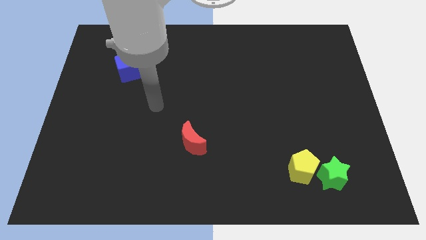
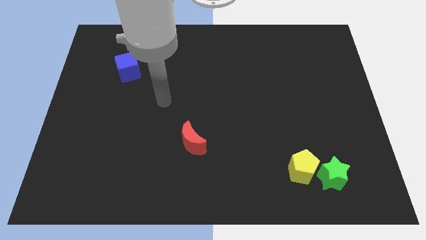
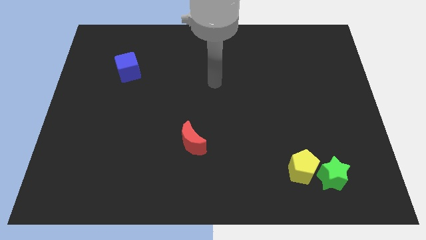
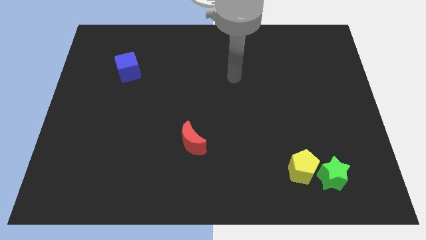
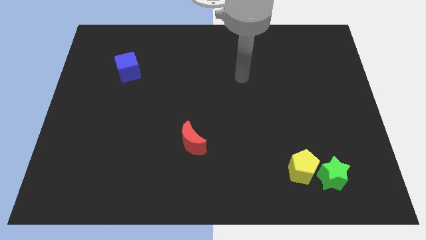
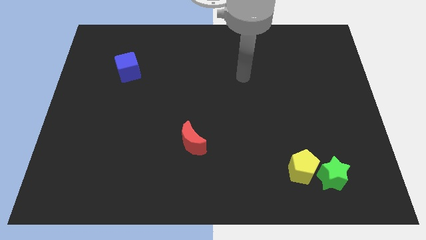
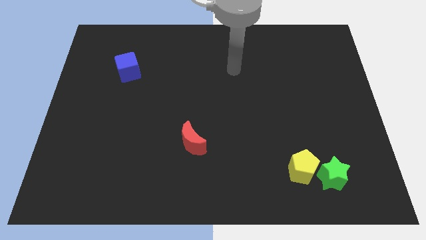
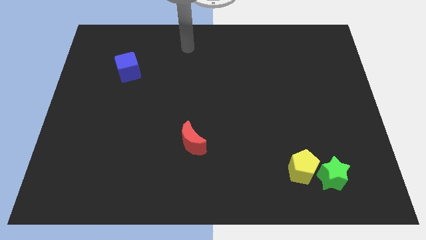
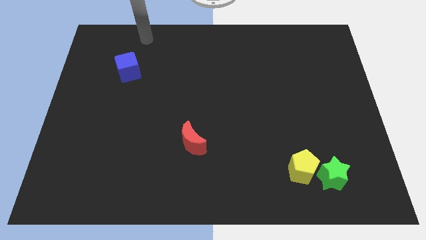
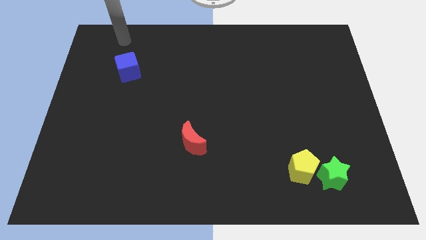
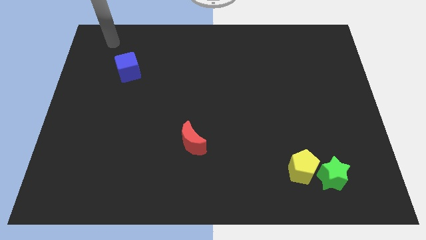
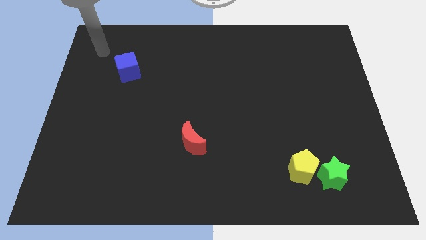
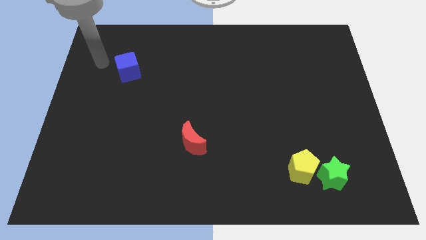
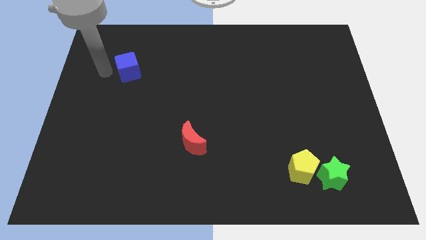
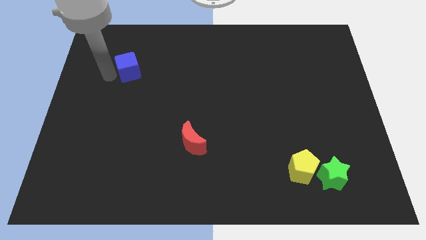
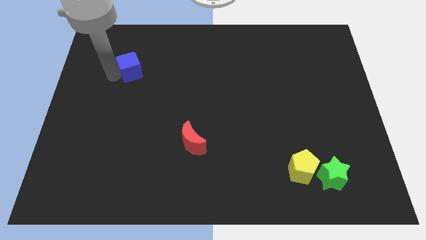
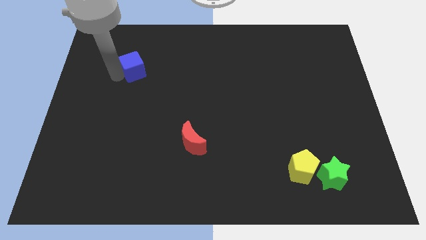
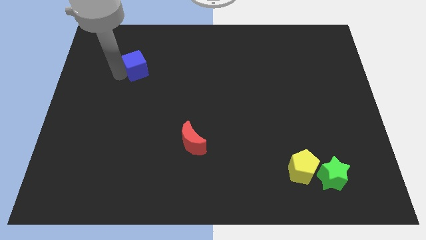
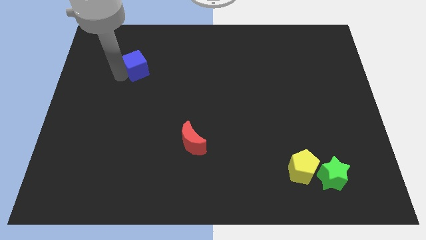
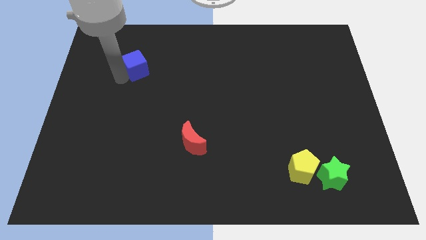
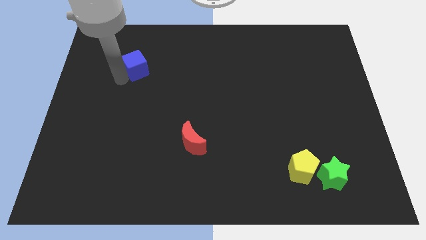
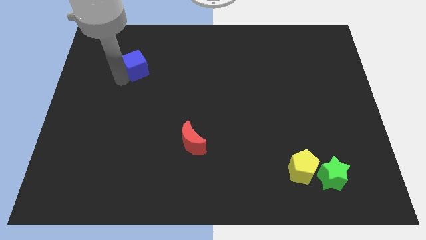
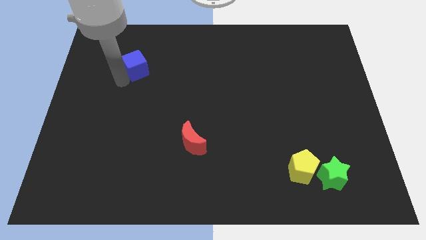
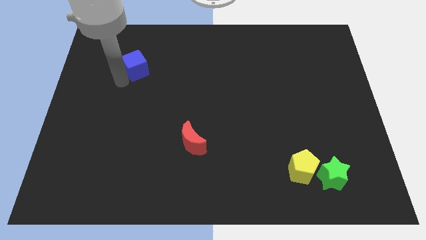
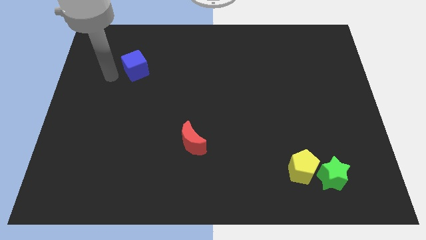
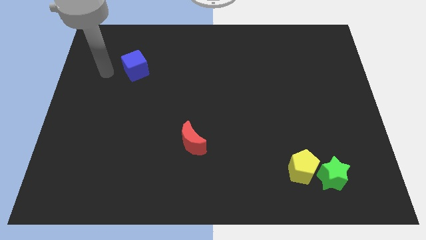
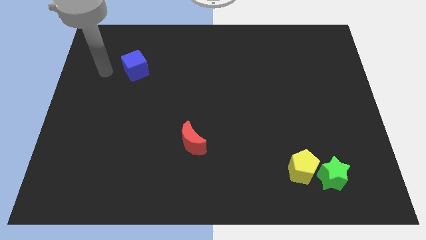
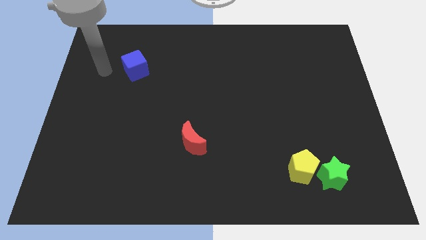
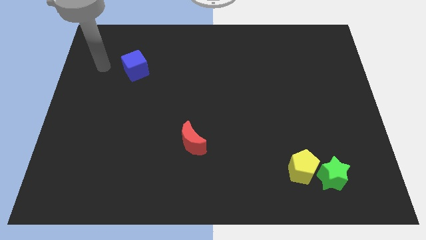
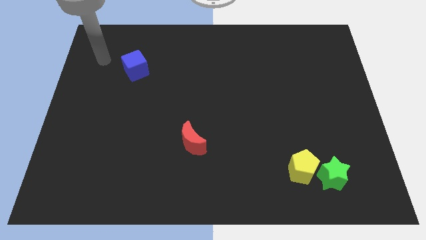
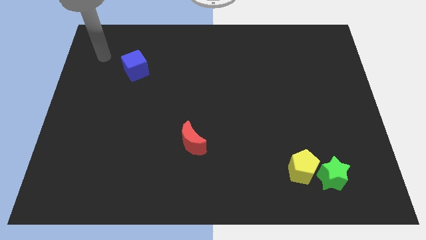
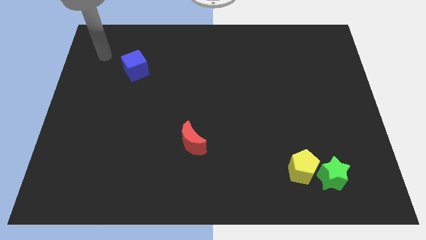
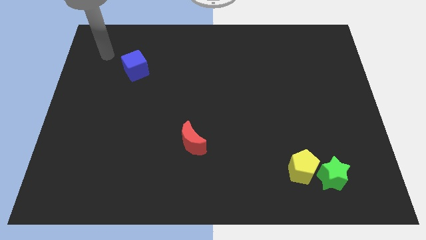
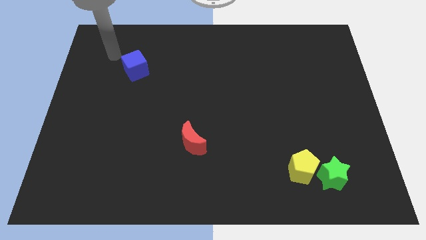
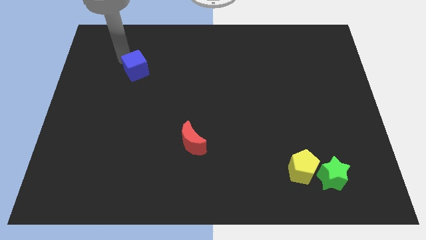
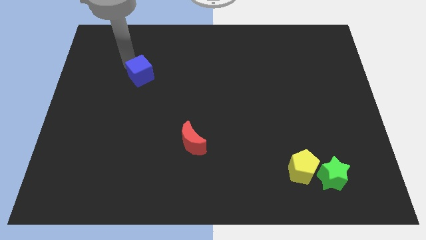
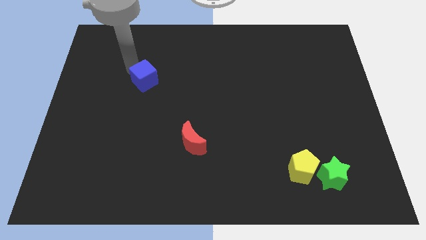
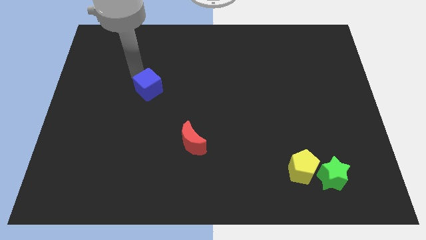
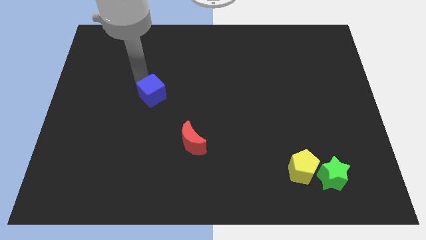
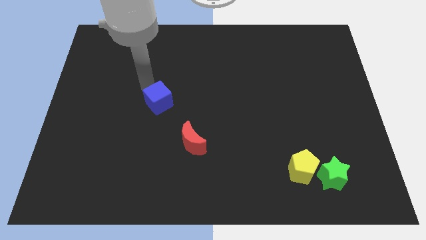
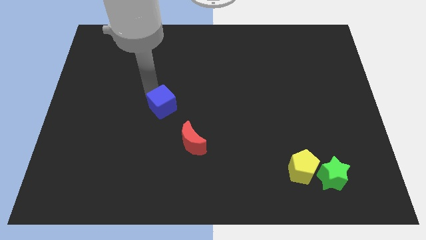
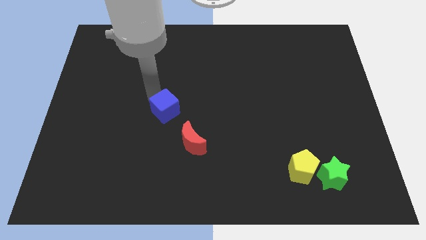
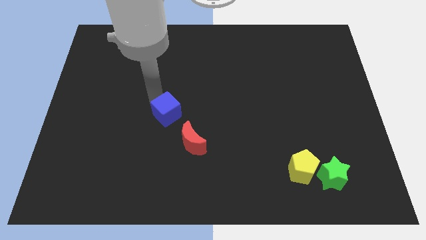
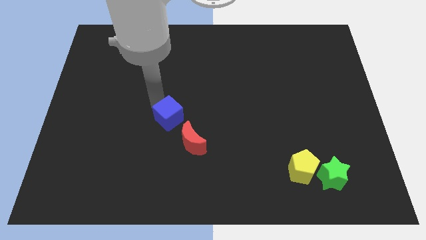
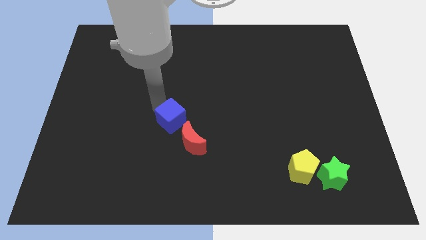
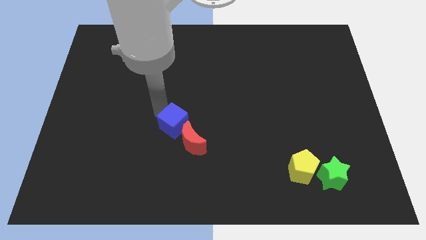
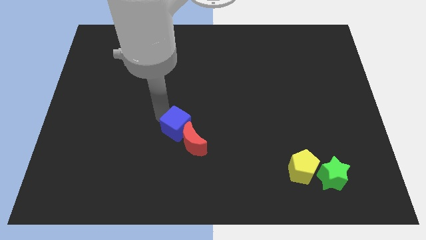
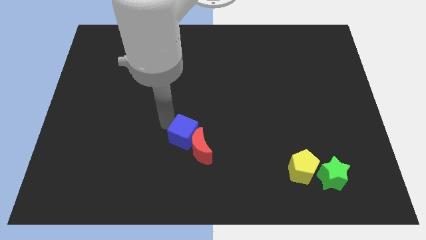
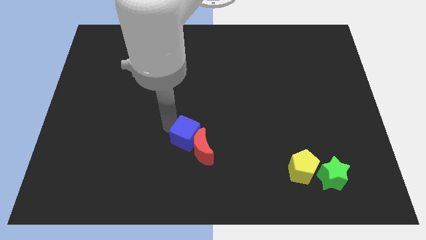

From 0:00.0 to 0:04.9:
slide the cube close to the red moon

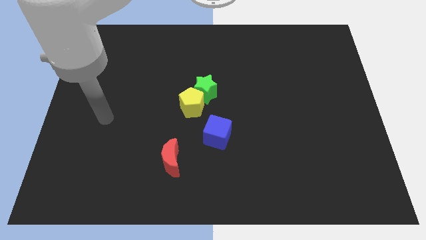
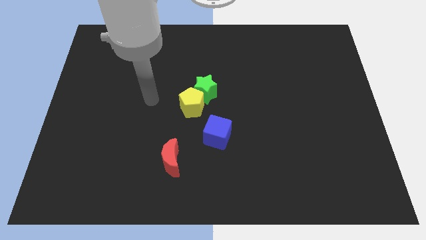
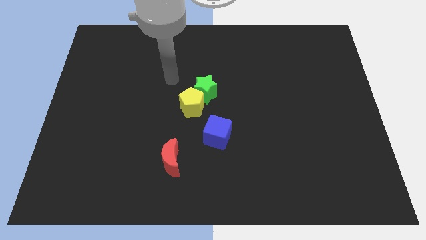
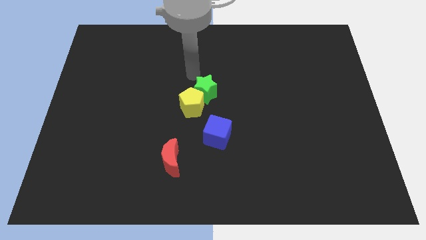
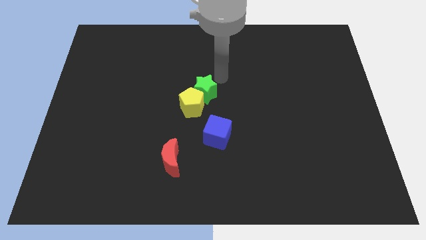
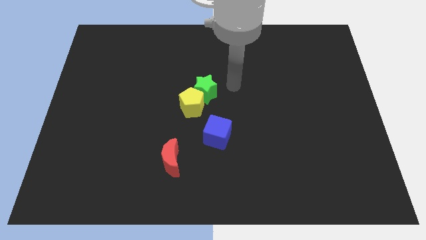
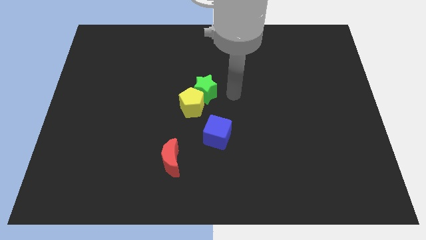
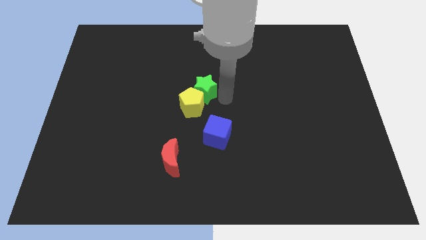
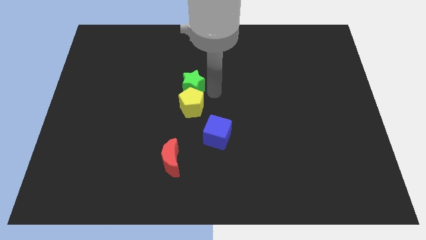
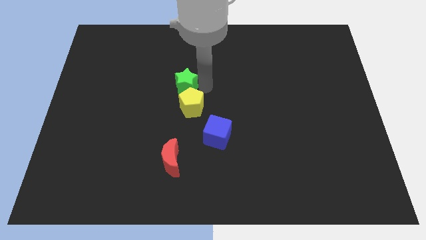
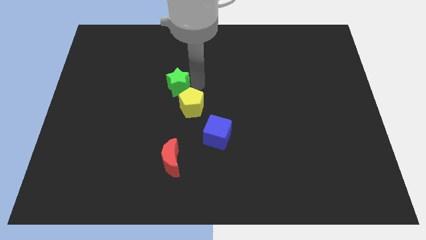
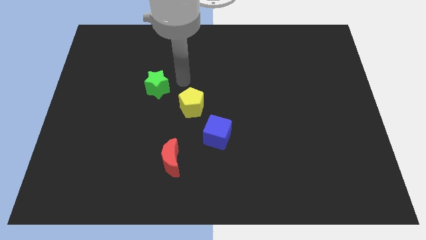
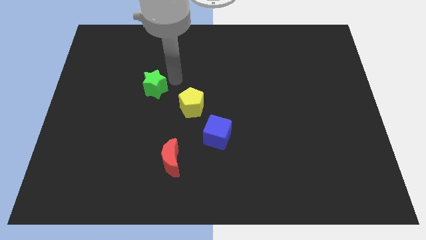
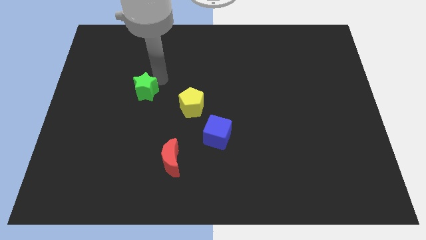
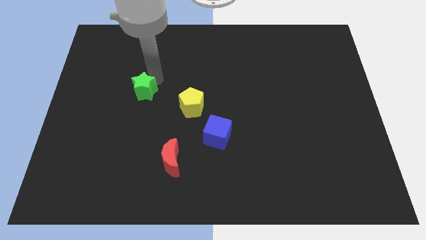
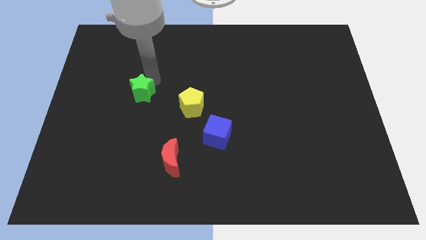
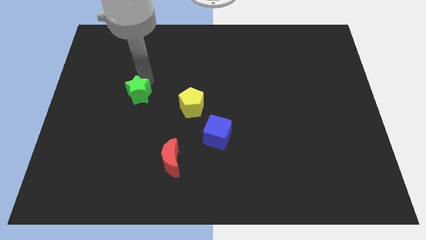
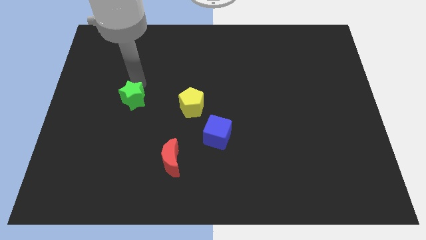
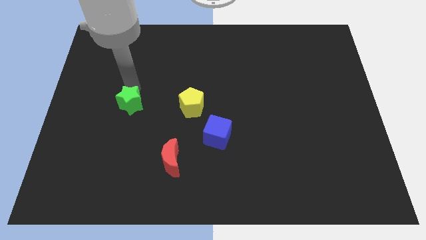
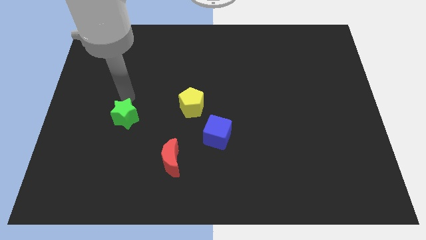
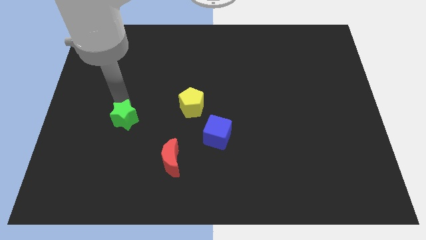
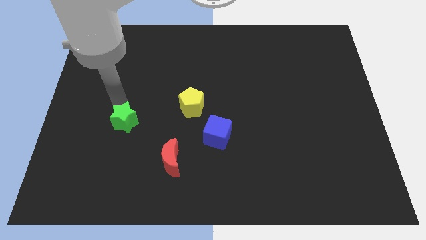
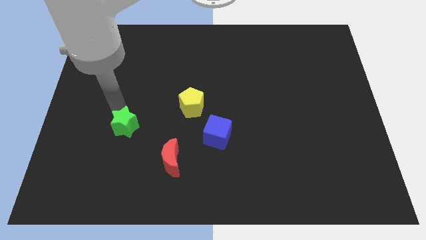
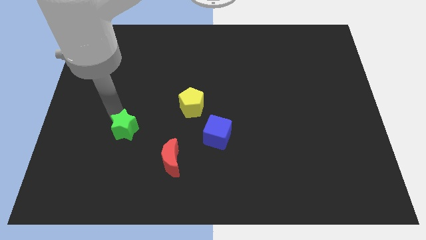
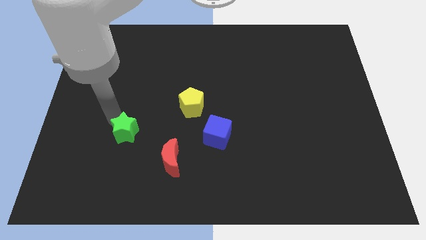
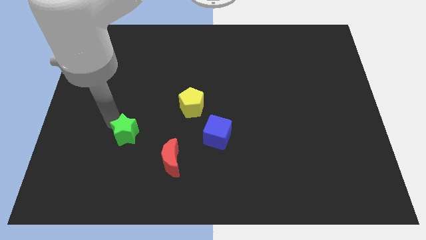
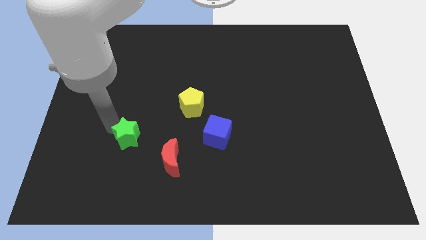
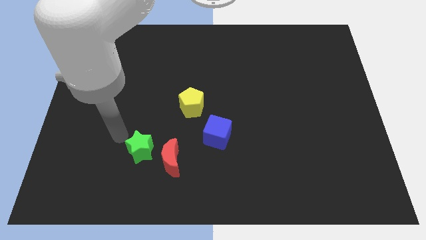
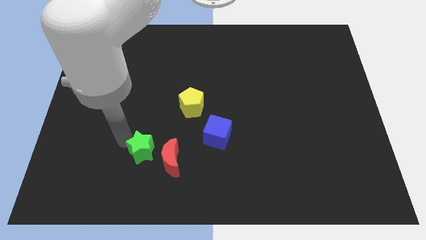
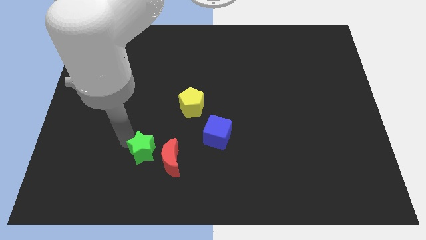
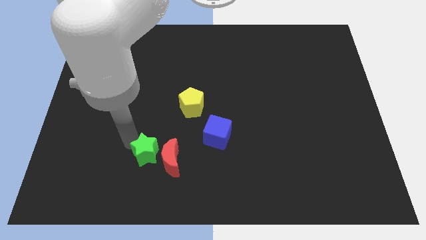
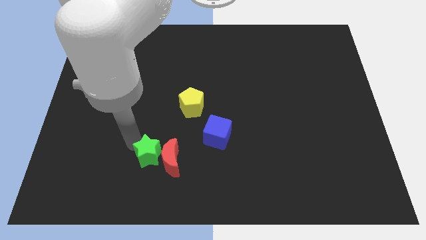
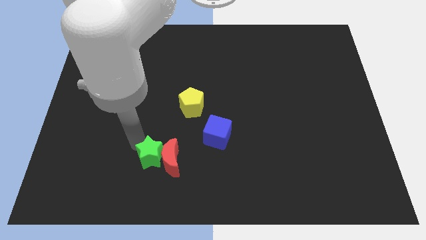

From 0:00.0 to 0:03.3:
slide the green star to the moon

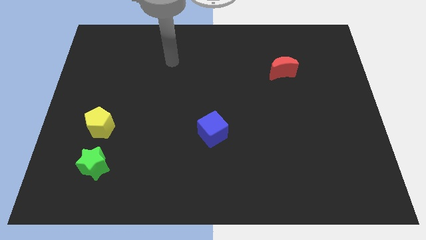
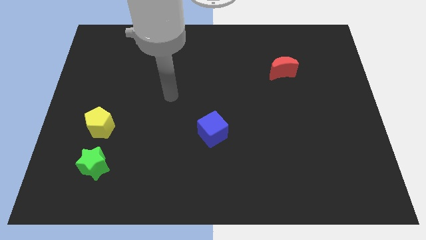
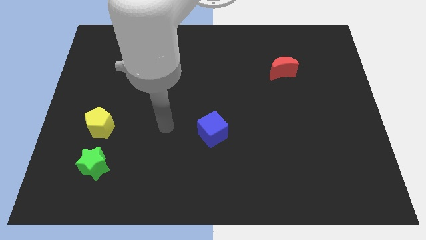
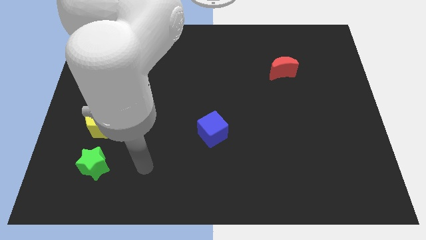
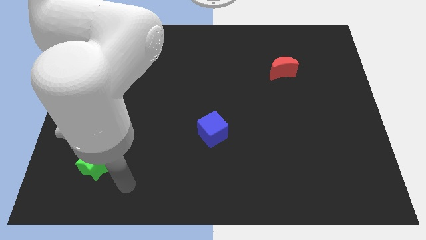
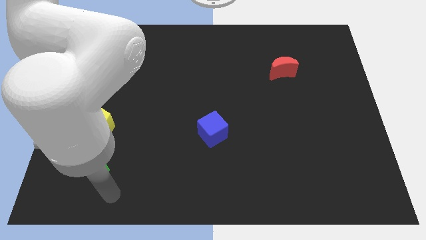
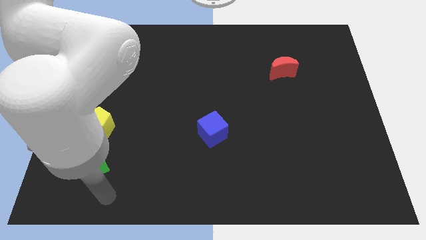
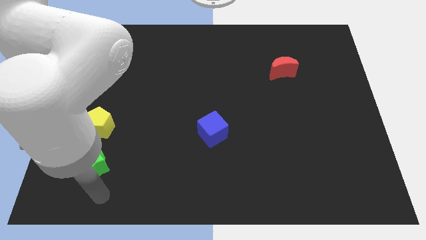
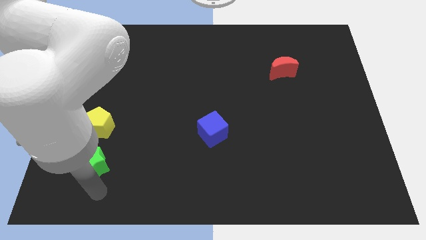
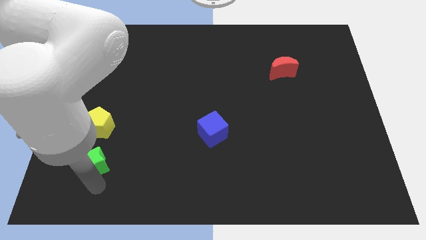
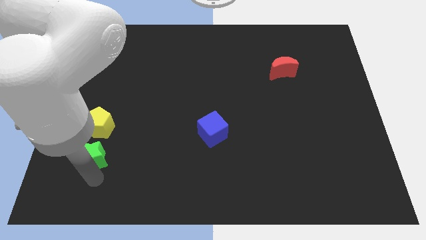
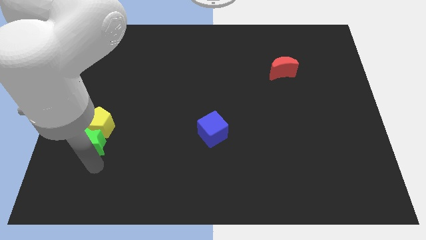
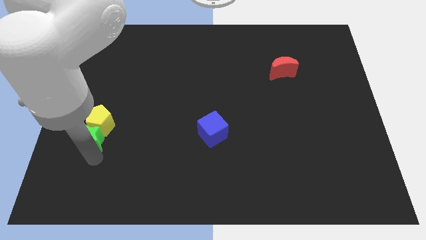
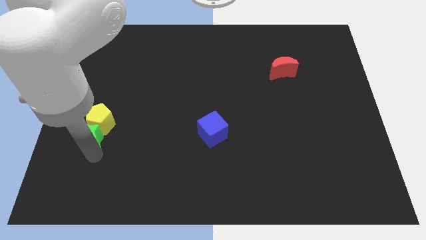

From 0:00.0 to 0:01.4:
put the green block next to the yellow block
